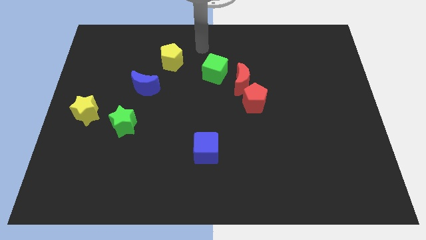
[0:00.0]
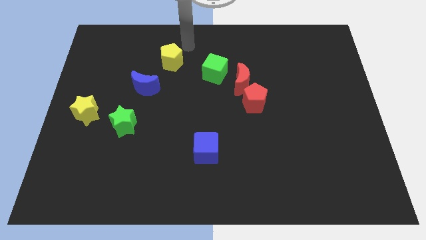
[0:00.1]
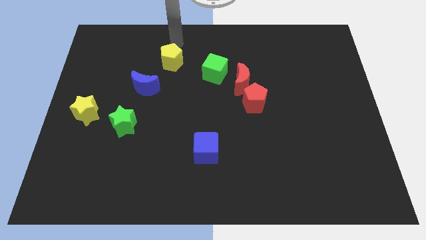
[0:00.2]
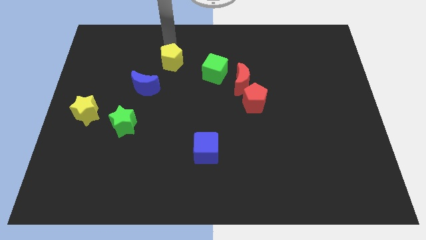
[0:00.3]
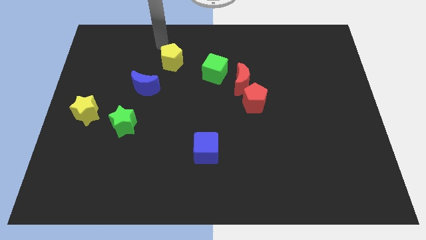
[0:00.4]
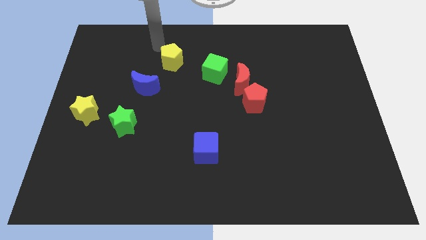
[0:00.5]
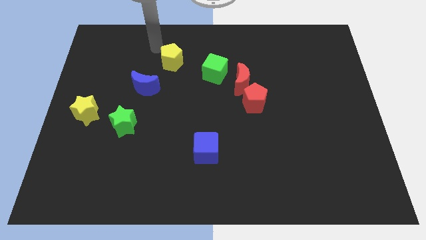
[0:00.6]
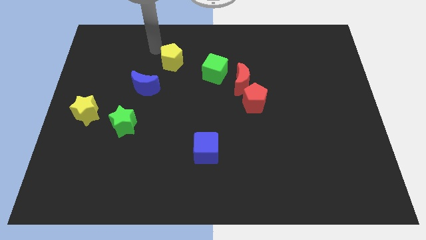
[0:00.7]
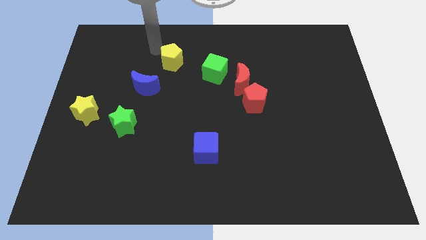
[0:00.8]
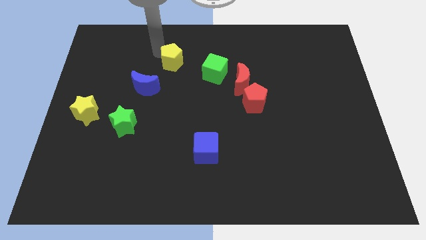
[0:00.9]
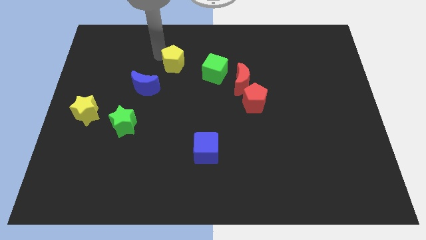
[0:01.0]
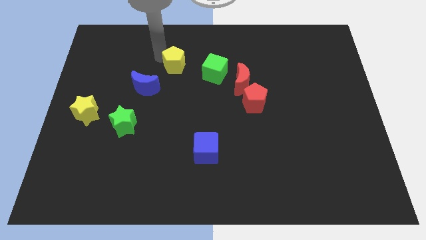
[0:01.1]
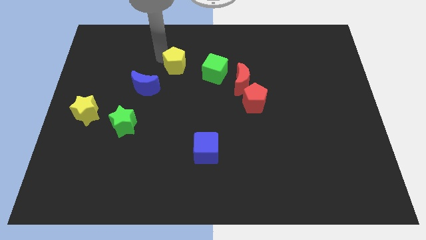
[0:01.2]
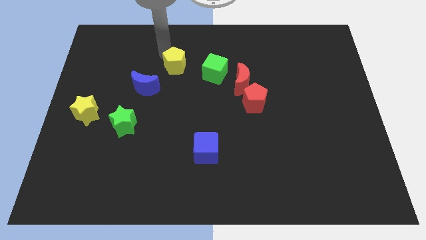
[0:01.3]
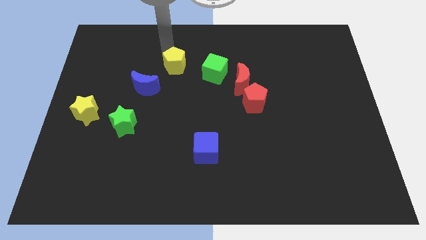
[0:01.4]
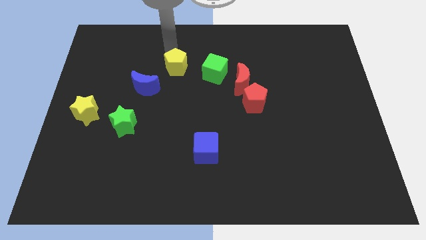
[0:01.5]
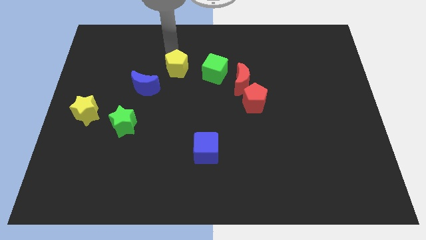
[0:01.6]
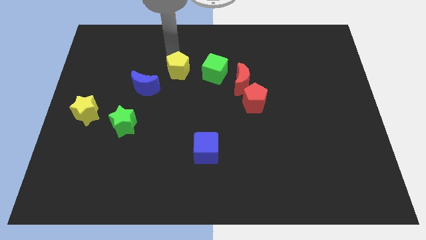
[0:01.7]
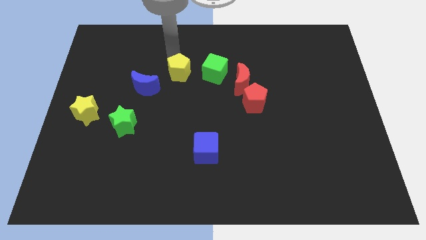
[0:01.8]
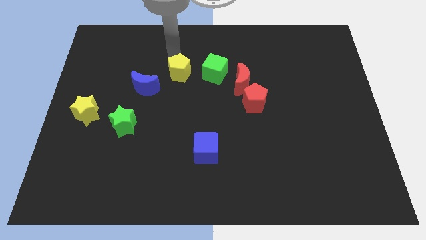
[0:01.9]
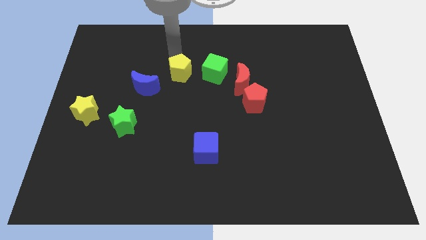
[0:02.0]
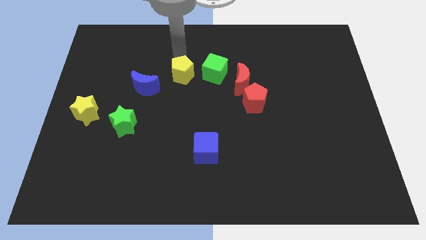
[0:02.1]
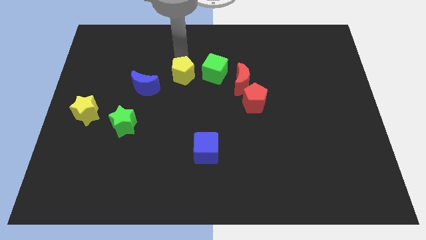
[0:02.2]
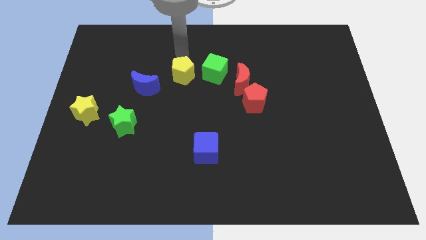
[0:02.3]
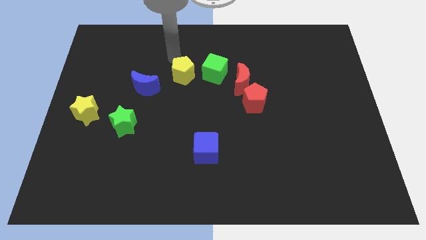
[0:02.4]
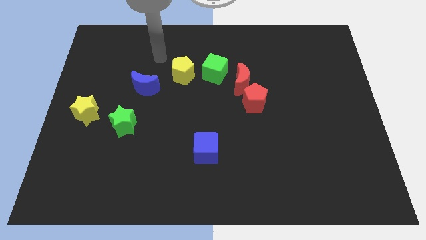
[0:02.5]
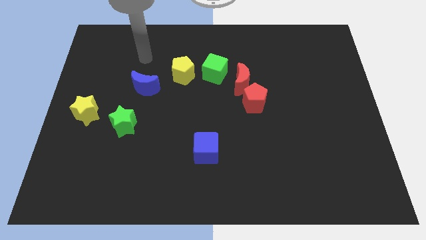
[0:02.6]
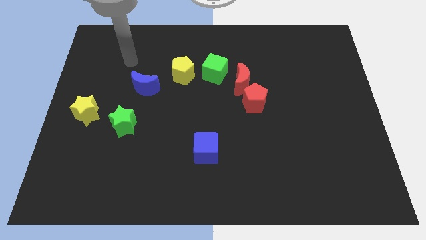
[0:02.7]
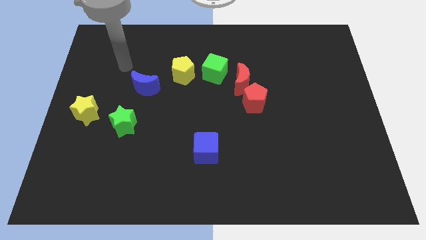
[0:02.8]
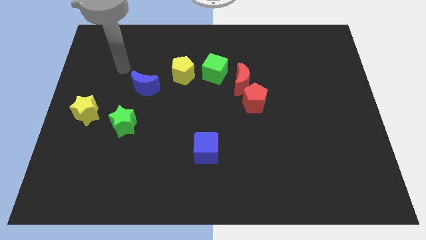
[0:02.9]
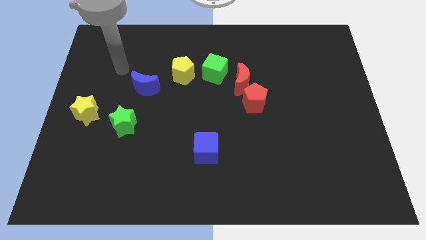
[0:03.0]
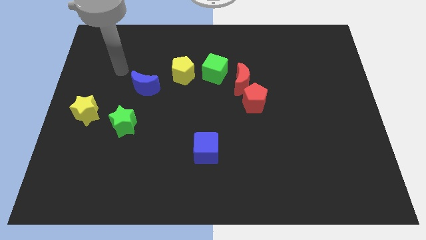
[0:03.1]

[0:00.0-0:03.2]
slide yellow pentagon to the left of green cube

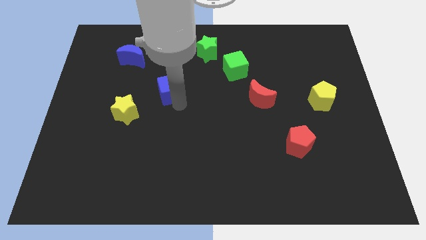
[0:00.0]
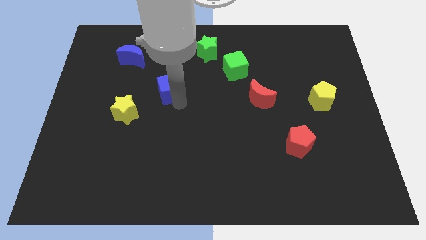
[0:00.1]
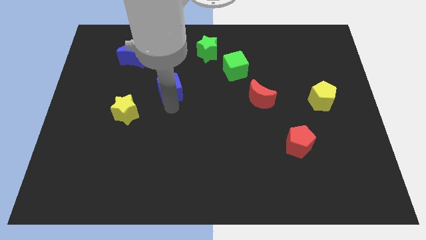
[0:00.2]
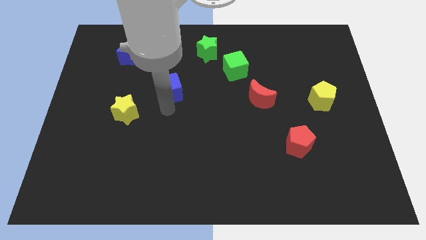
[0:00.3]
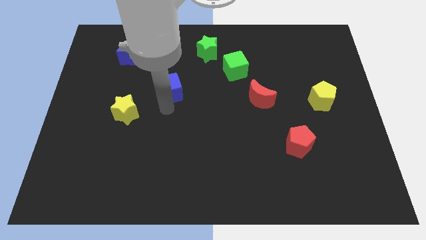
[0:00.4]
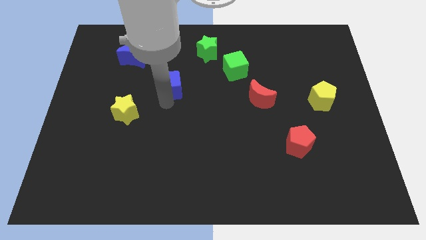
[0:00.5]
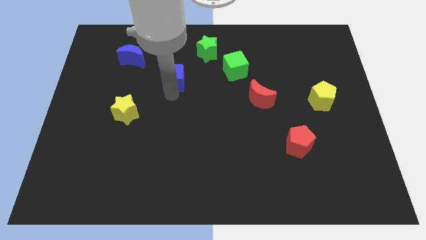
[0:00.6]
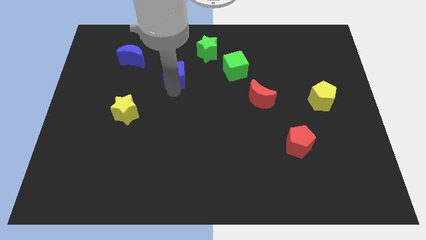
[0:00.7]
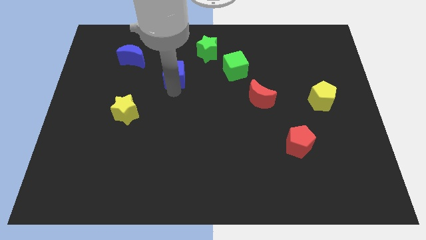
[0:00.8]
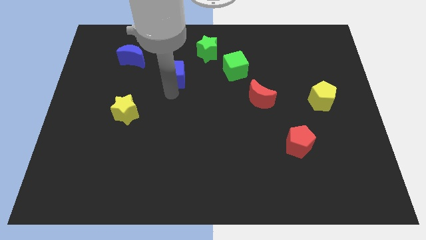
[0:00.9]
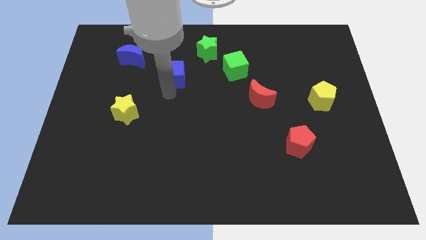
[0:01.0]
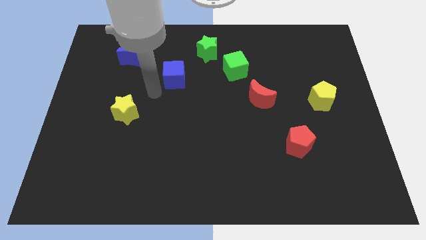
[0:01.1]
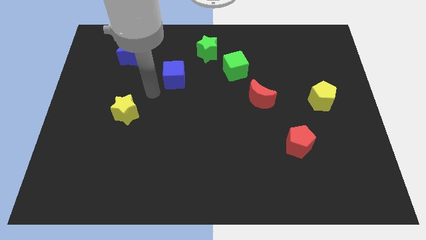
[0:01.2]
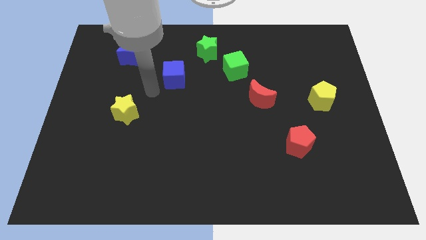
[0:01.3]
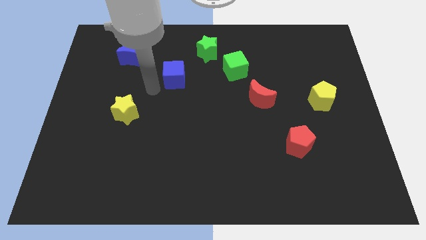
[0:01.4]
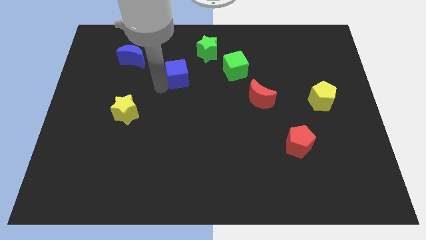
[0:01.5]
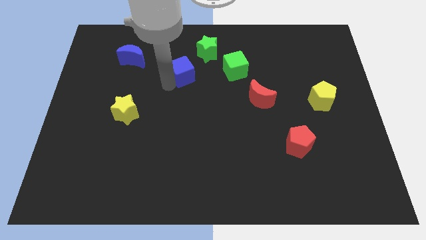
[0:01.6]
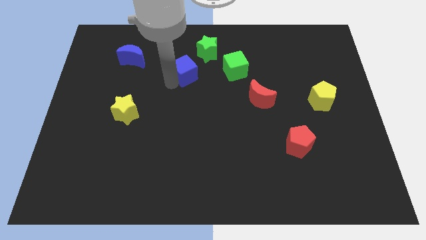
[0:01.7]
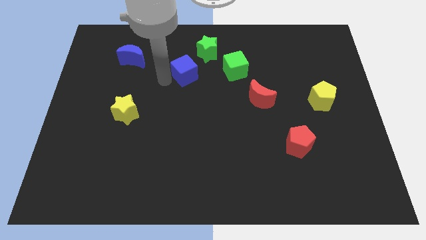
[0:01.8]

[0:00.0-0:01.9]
move the blue cube towards the green star

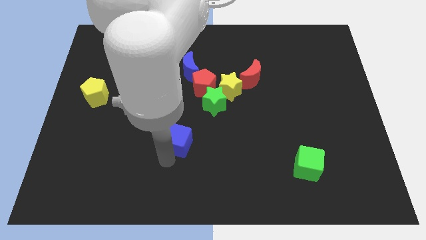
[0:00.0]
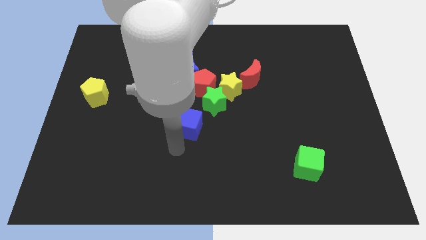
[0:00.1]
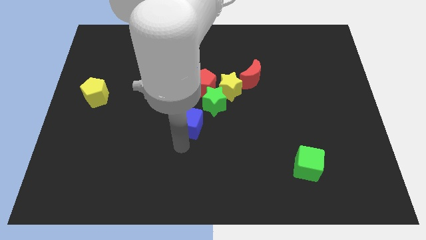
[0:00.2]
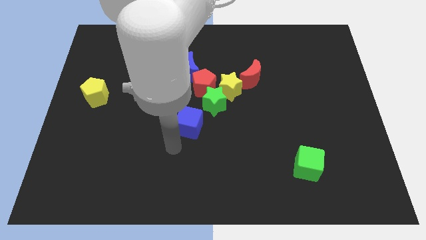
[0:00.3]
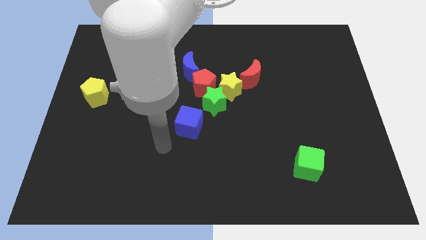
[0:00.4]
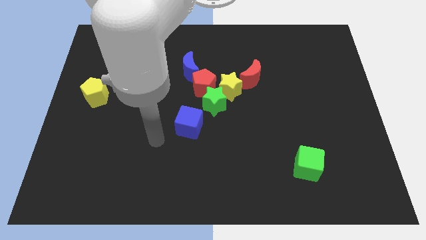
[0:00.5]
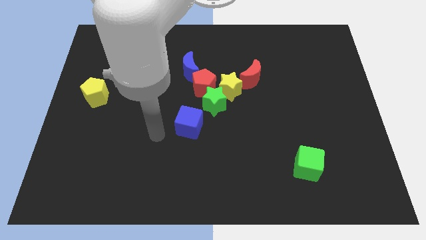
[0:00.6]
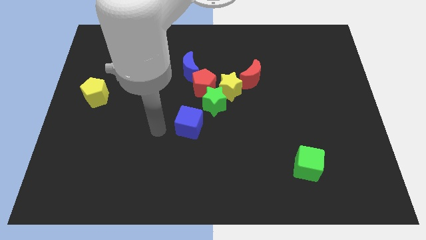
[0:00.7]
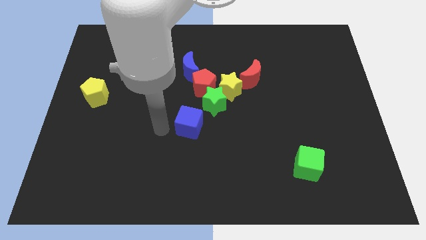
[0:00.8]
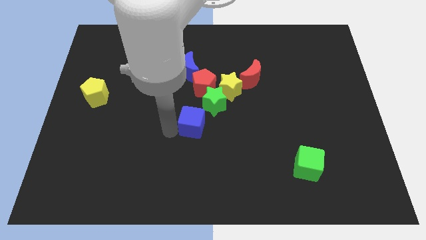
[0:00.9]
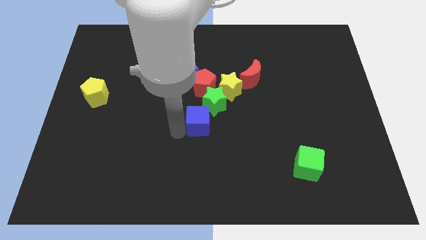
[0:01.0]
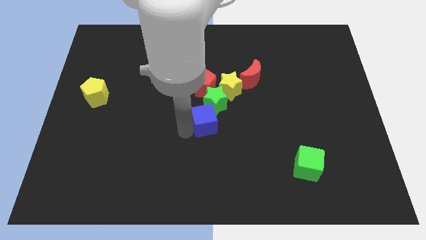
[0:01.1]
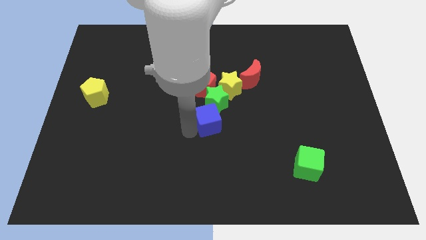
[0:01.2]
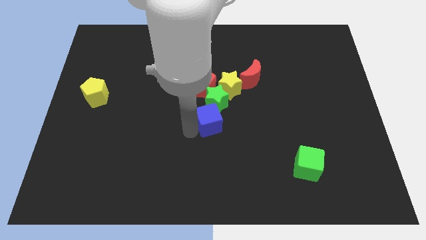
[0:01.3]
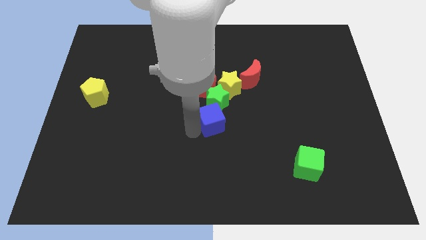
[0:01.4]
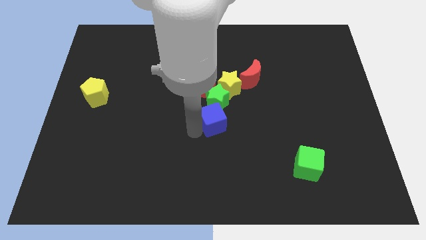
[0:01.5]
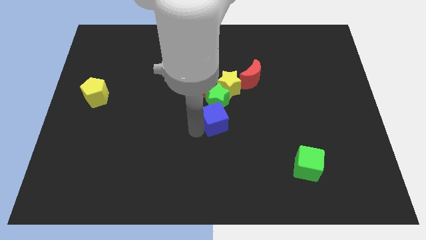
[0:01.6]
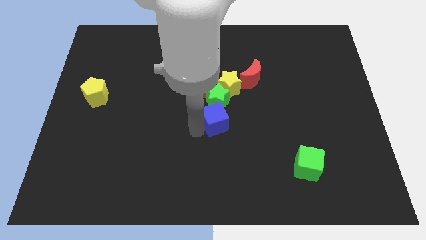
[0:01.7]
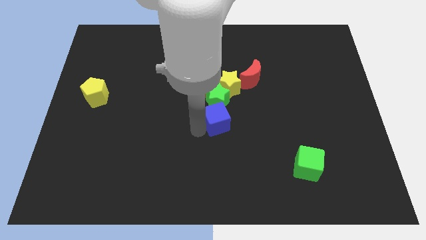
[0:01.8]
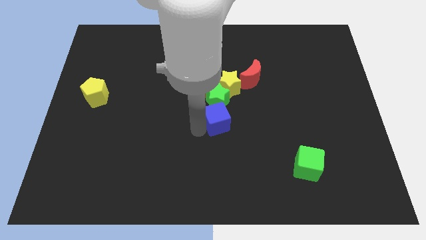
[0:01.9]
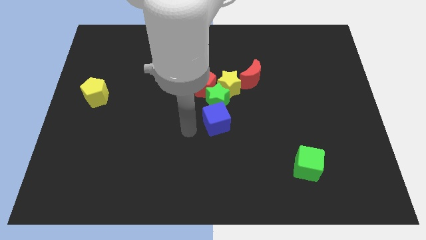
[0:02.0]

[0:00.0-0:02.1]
move the blue cube to the bottom of the green star

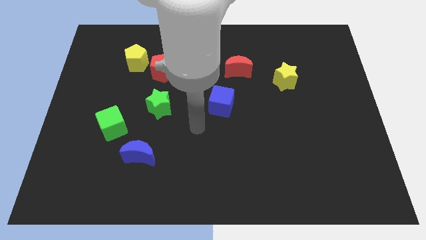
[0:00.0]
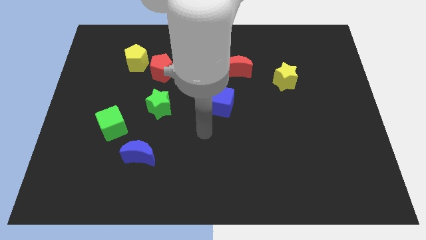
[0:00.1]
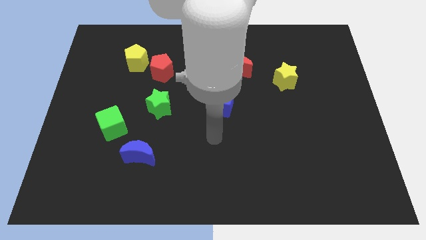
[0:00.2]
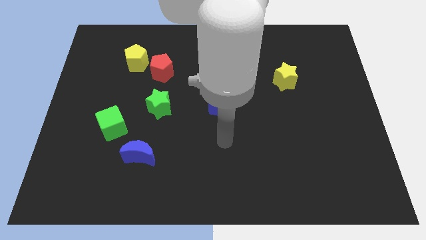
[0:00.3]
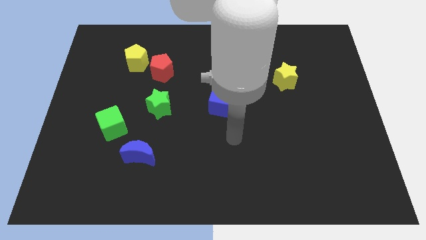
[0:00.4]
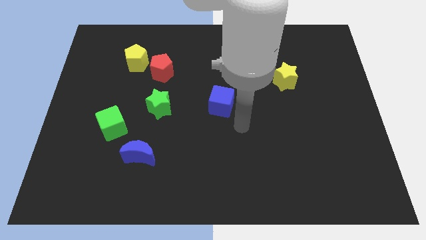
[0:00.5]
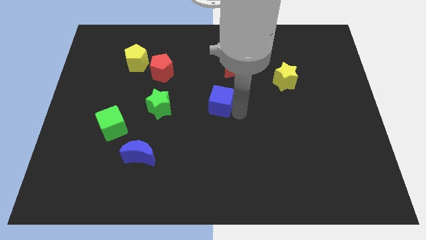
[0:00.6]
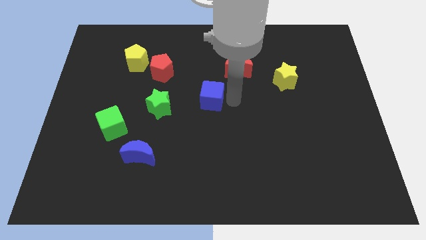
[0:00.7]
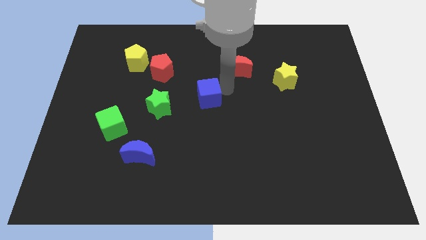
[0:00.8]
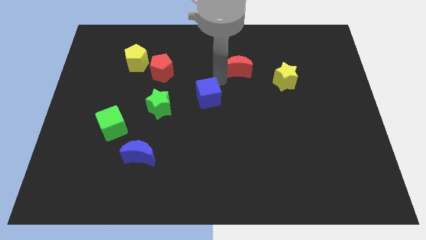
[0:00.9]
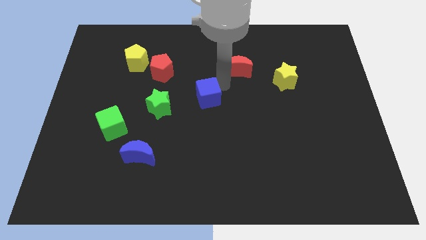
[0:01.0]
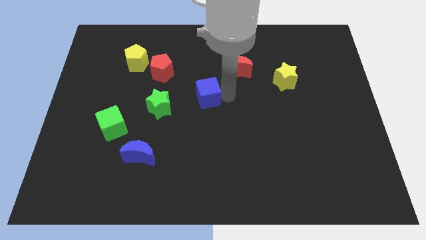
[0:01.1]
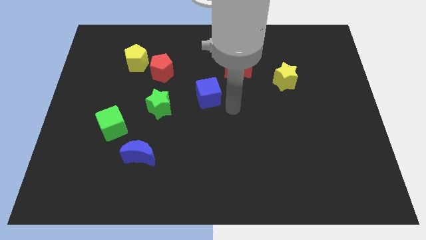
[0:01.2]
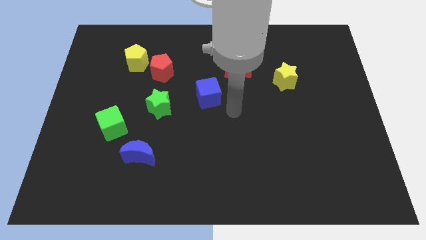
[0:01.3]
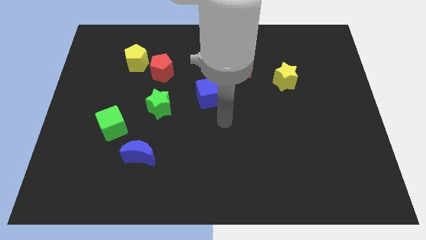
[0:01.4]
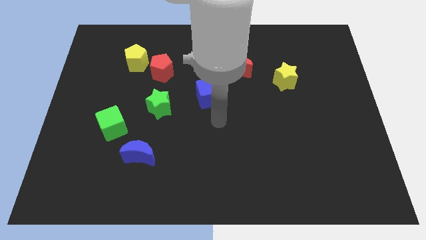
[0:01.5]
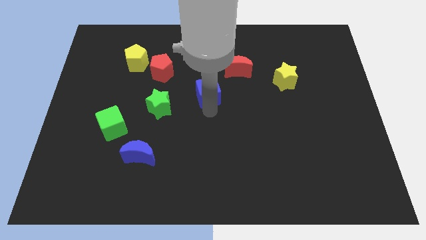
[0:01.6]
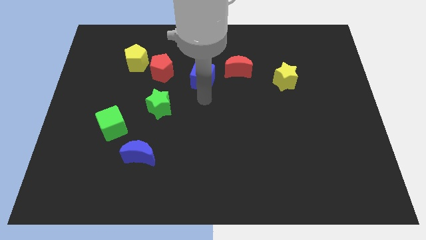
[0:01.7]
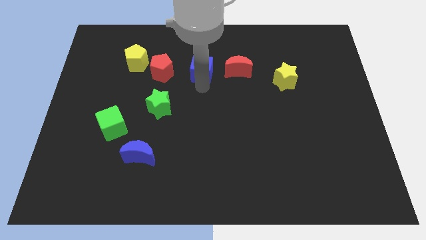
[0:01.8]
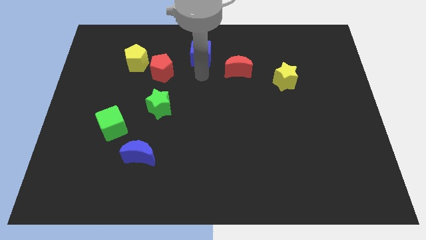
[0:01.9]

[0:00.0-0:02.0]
push the blue cube between red pentagon and red crescent
